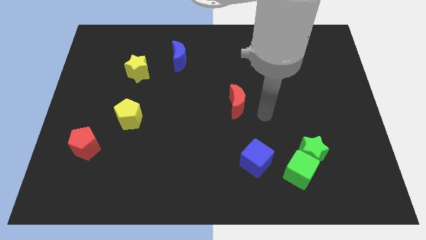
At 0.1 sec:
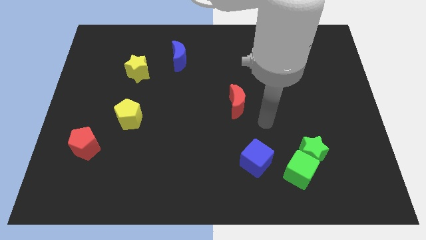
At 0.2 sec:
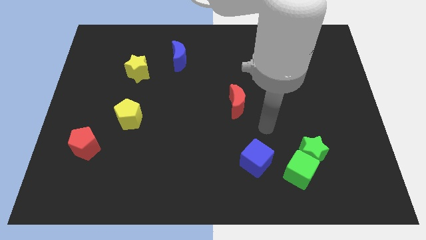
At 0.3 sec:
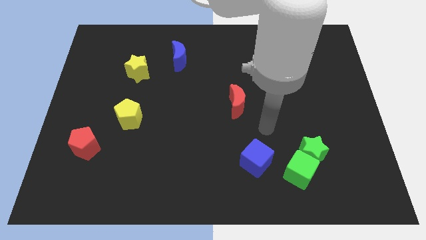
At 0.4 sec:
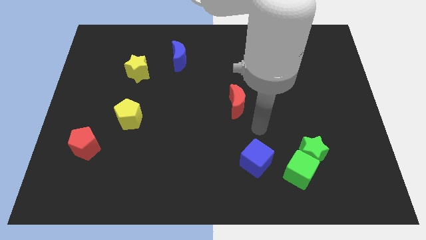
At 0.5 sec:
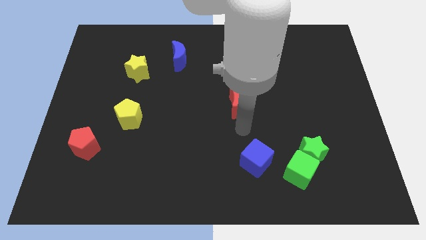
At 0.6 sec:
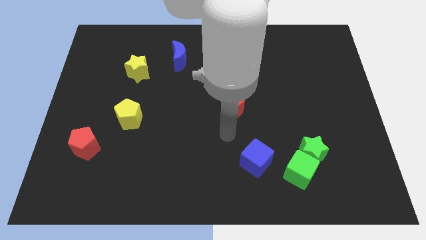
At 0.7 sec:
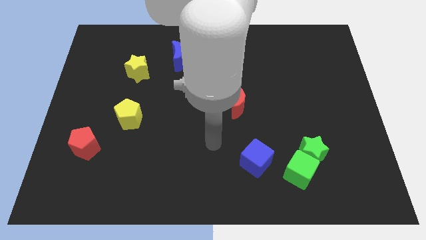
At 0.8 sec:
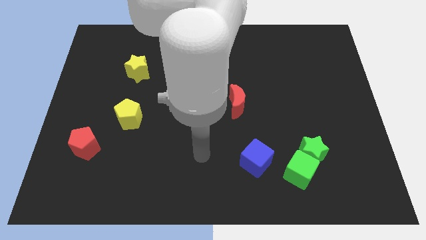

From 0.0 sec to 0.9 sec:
point your hand to the left of the blue cube

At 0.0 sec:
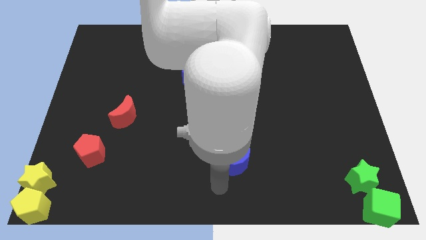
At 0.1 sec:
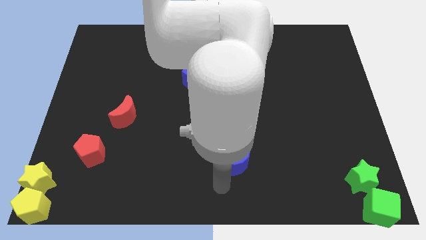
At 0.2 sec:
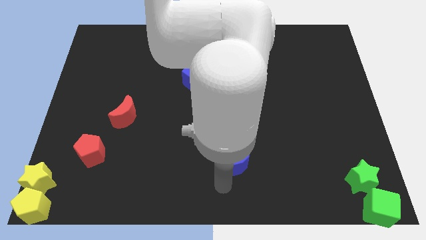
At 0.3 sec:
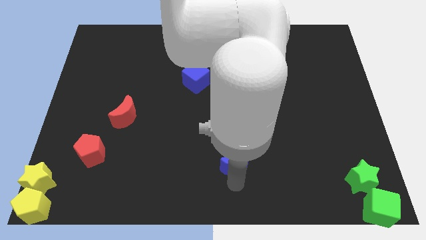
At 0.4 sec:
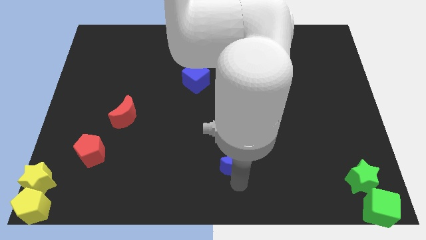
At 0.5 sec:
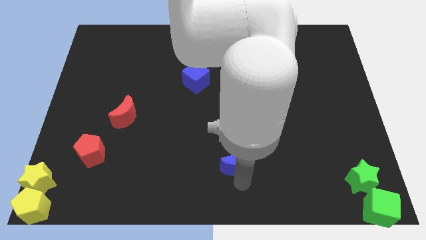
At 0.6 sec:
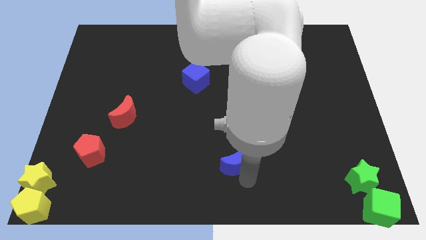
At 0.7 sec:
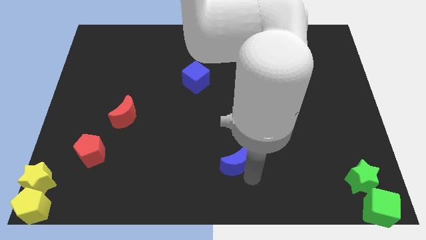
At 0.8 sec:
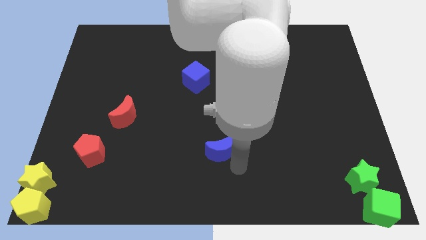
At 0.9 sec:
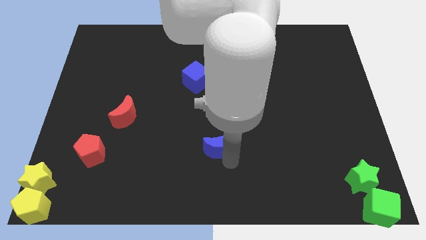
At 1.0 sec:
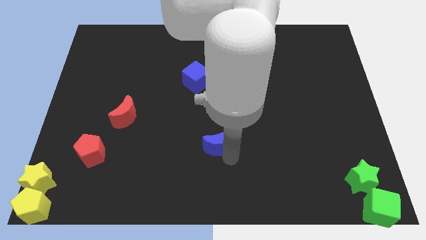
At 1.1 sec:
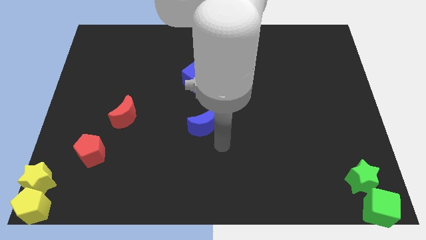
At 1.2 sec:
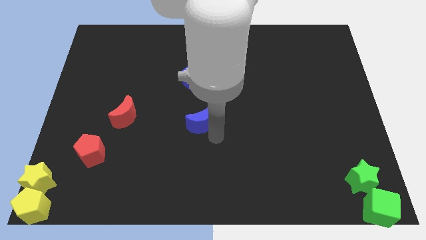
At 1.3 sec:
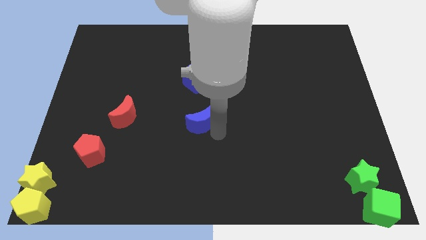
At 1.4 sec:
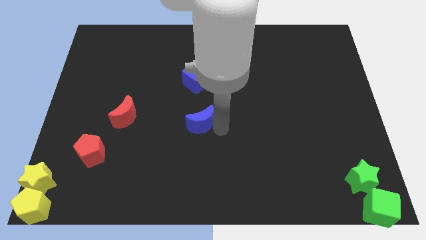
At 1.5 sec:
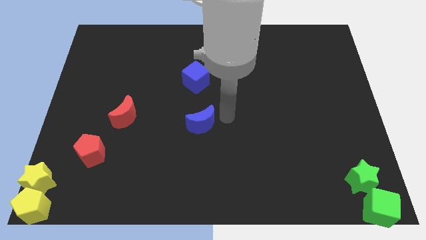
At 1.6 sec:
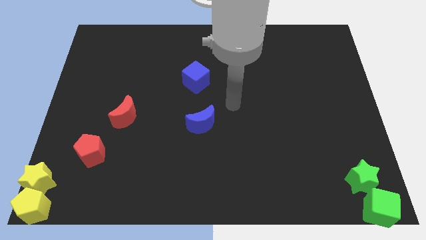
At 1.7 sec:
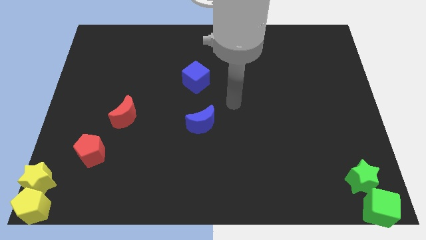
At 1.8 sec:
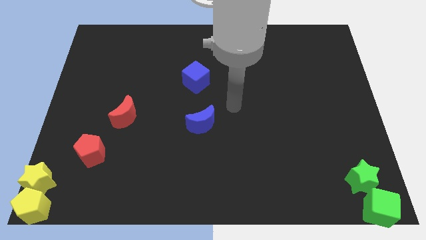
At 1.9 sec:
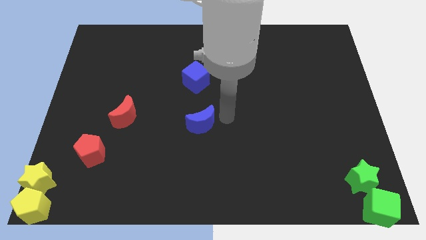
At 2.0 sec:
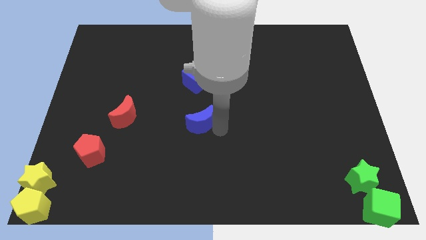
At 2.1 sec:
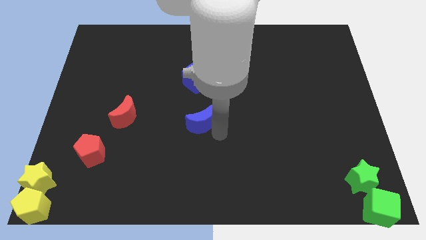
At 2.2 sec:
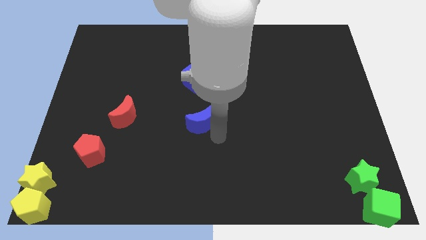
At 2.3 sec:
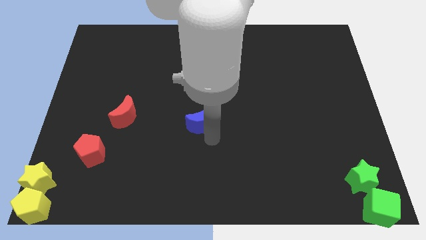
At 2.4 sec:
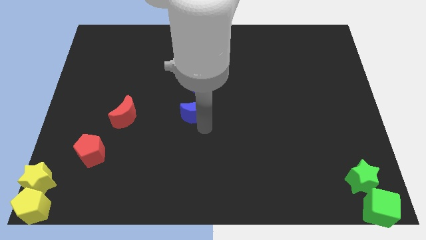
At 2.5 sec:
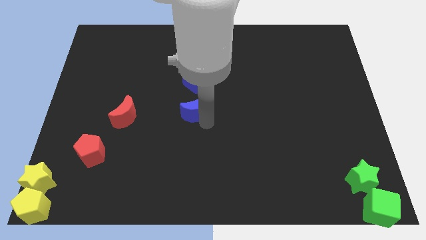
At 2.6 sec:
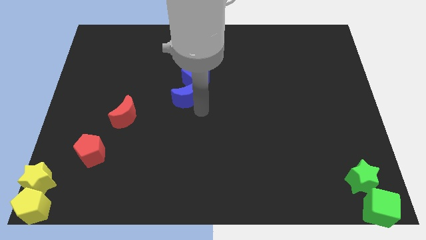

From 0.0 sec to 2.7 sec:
move the blue moon below the blue cube at the center

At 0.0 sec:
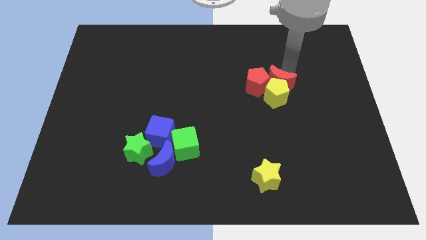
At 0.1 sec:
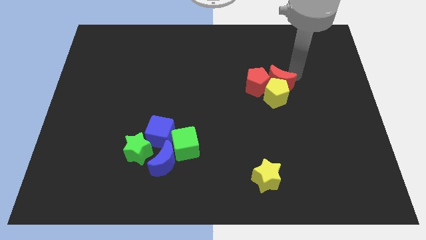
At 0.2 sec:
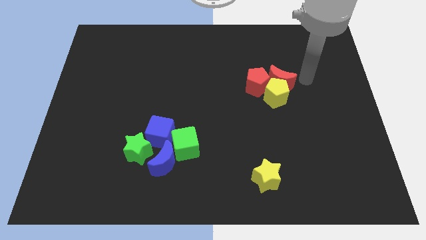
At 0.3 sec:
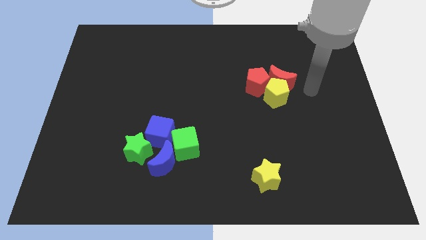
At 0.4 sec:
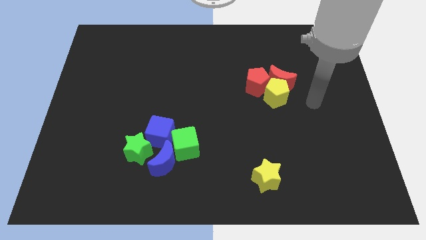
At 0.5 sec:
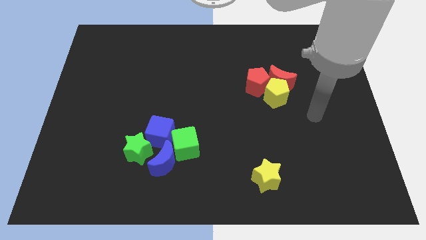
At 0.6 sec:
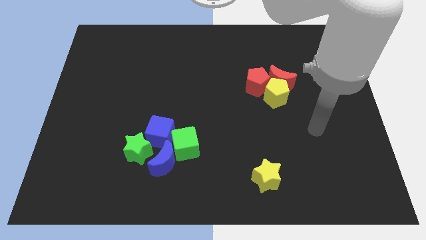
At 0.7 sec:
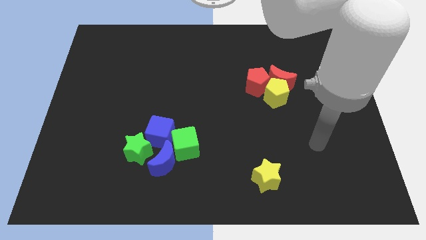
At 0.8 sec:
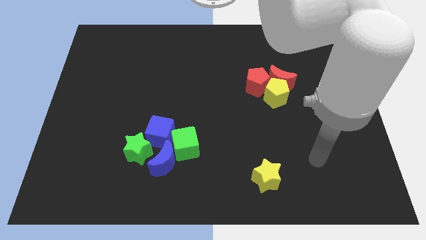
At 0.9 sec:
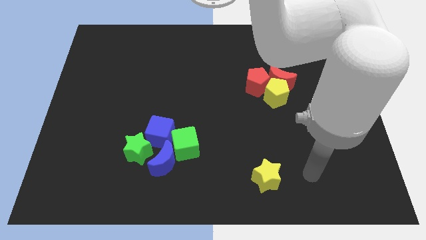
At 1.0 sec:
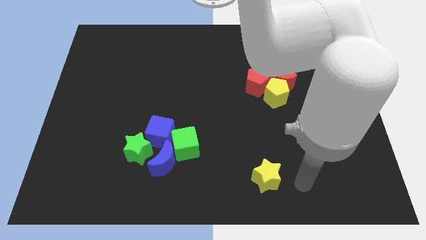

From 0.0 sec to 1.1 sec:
move your arm right to the yellow star

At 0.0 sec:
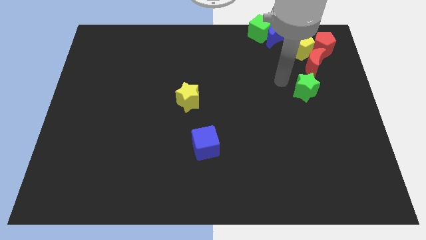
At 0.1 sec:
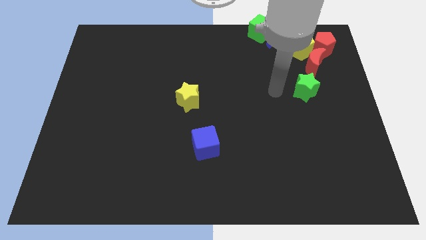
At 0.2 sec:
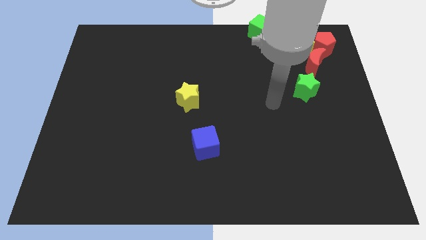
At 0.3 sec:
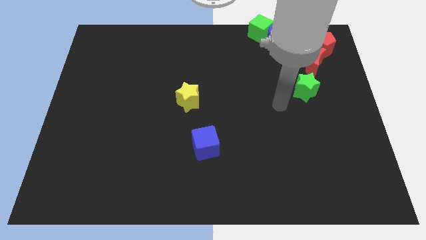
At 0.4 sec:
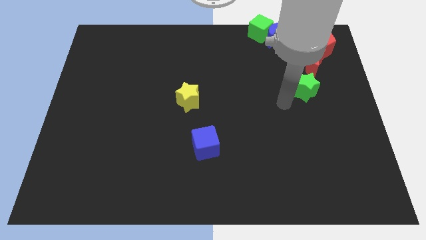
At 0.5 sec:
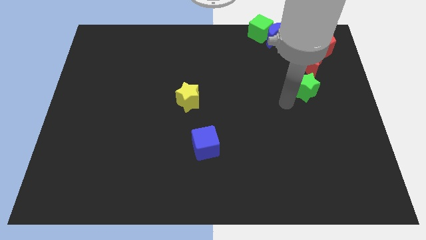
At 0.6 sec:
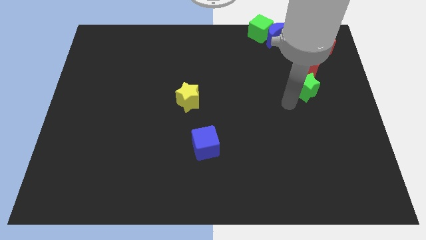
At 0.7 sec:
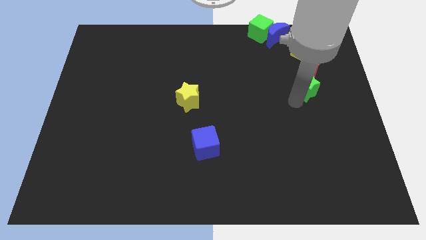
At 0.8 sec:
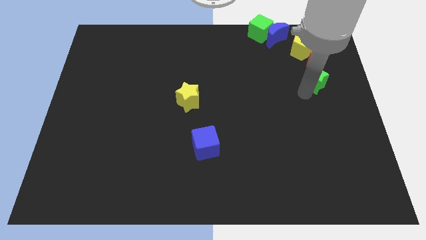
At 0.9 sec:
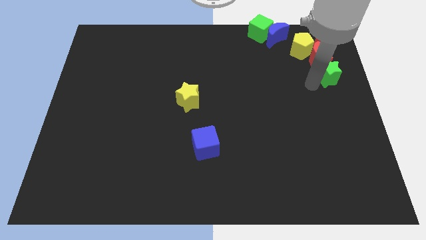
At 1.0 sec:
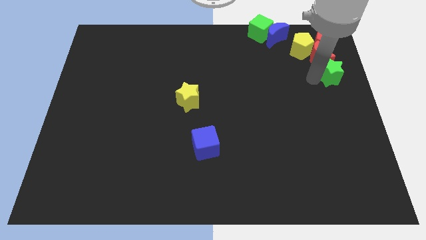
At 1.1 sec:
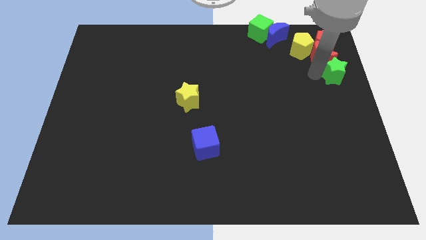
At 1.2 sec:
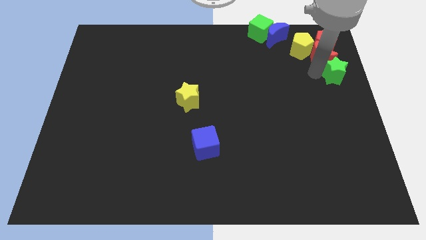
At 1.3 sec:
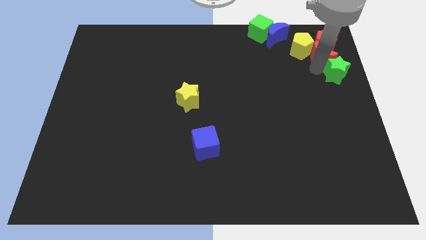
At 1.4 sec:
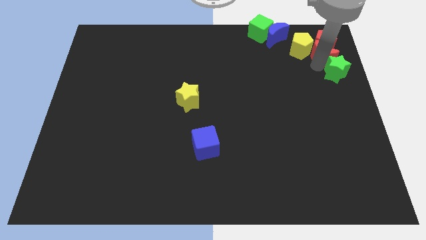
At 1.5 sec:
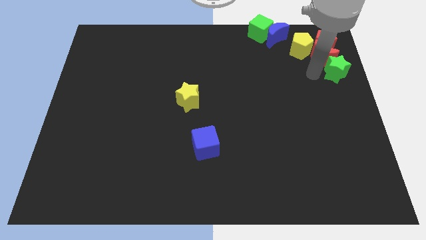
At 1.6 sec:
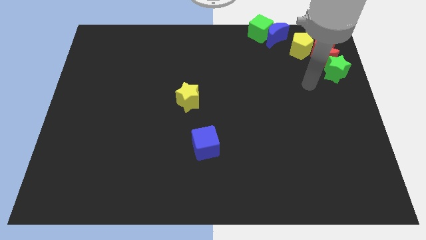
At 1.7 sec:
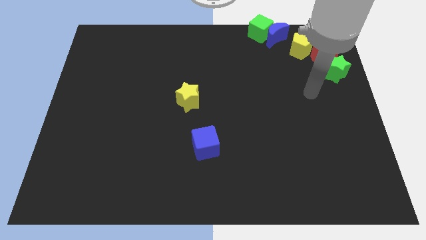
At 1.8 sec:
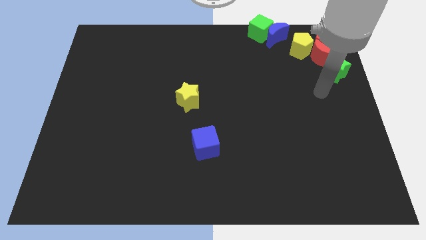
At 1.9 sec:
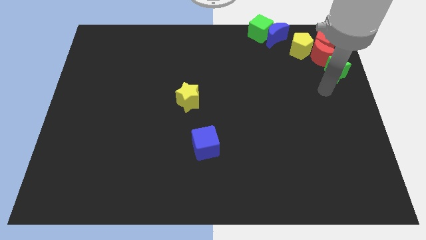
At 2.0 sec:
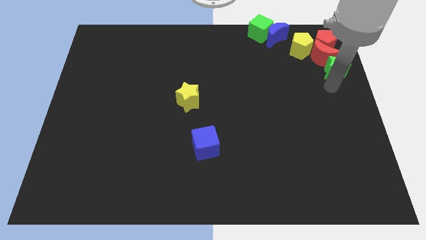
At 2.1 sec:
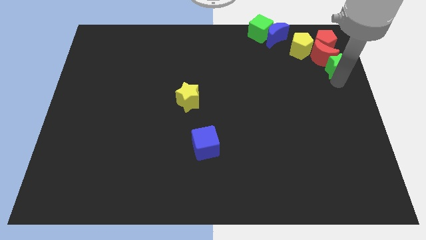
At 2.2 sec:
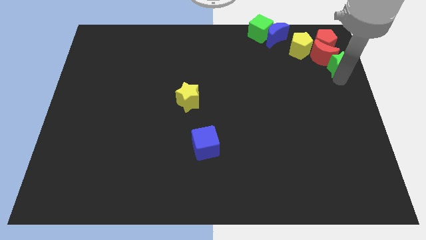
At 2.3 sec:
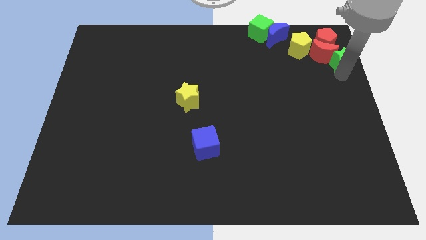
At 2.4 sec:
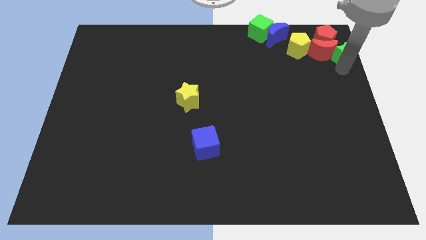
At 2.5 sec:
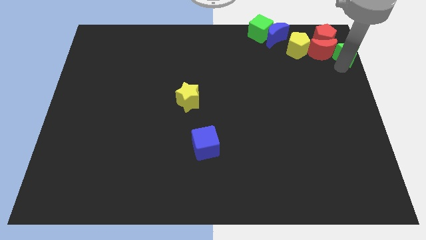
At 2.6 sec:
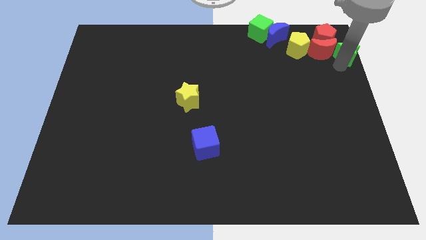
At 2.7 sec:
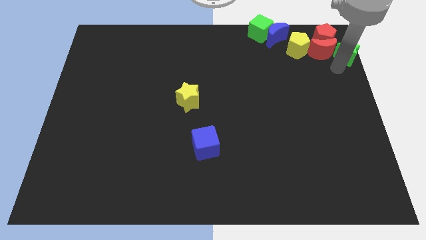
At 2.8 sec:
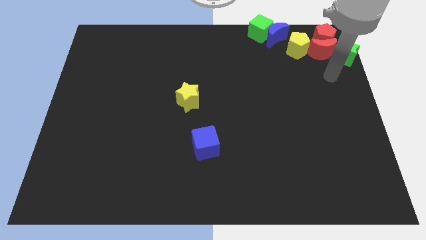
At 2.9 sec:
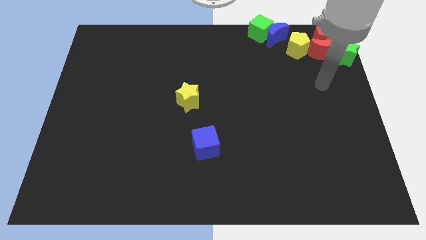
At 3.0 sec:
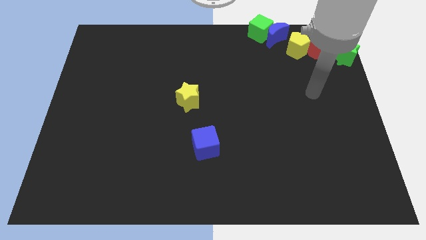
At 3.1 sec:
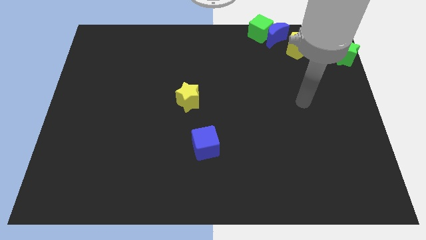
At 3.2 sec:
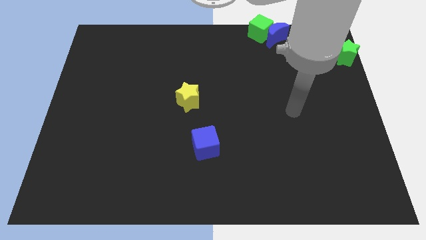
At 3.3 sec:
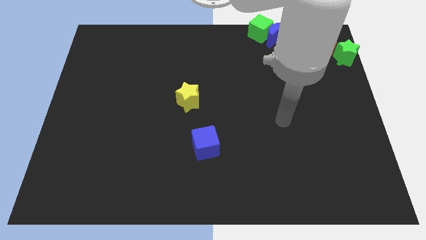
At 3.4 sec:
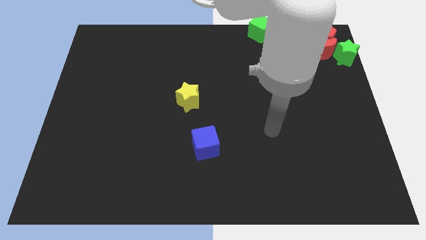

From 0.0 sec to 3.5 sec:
move the green star to the left of the red moon

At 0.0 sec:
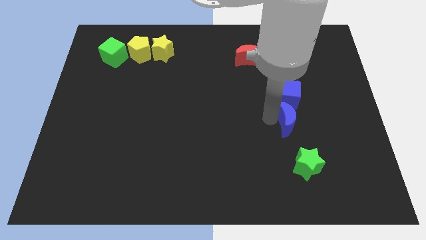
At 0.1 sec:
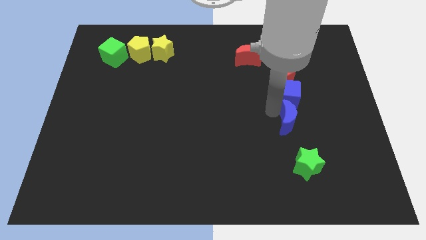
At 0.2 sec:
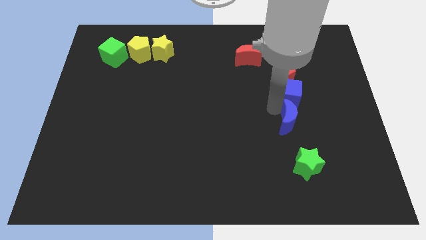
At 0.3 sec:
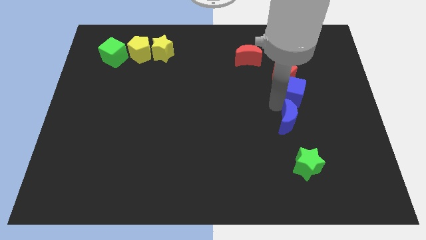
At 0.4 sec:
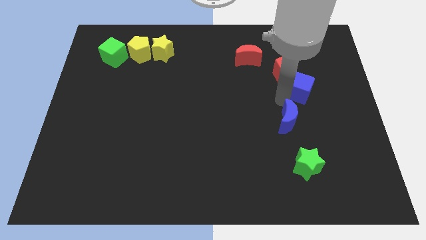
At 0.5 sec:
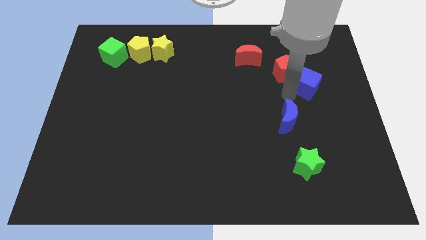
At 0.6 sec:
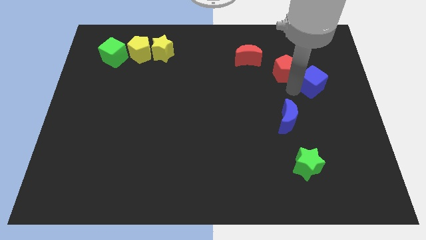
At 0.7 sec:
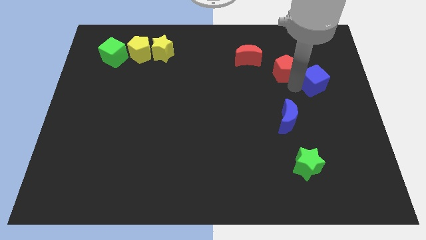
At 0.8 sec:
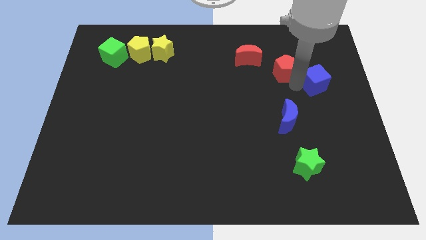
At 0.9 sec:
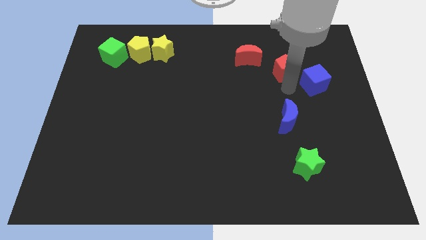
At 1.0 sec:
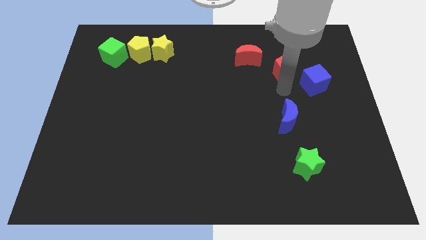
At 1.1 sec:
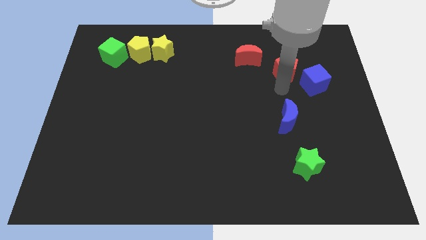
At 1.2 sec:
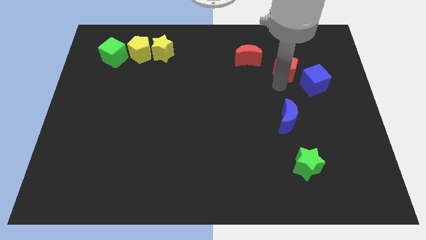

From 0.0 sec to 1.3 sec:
separate the blue blocks
